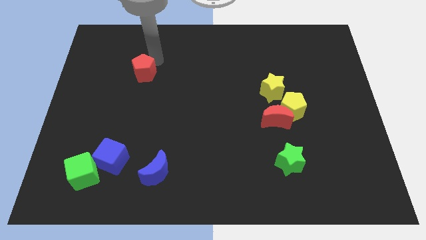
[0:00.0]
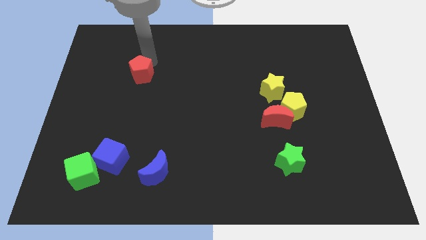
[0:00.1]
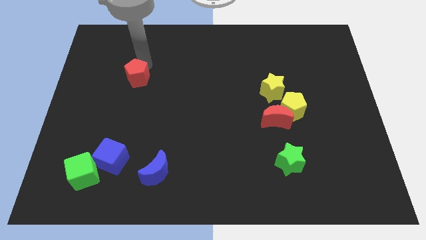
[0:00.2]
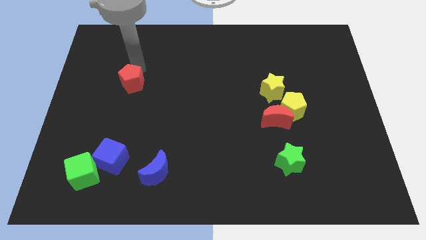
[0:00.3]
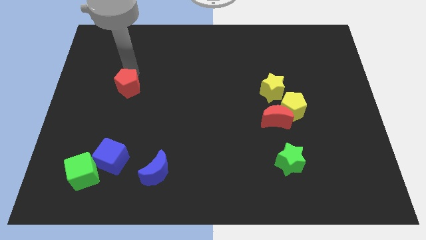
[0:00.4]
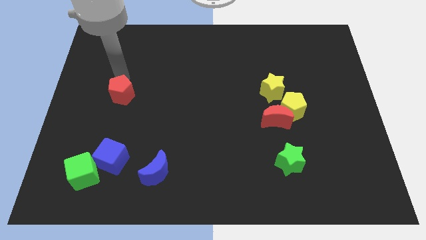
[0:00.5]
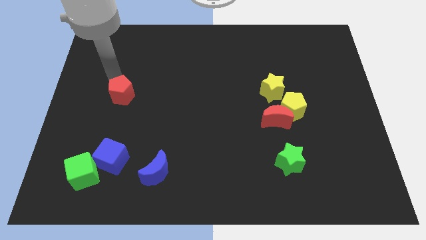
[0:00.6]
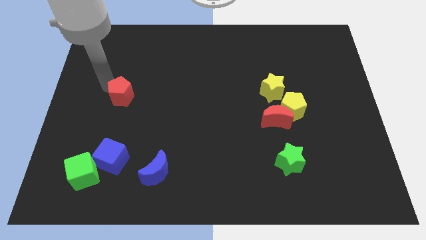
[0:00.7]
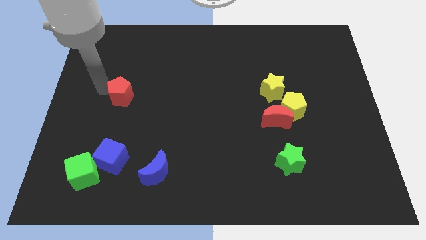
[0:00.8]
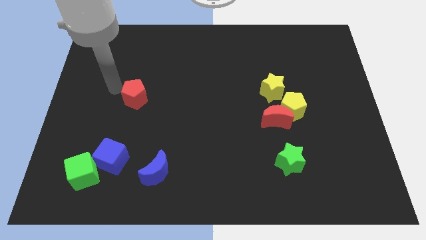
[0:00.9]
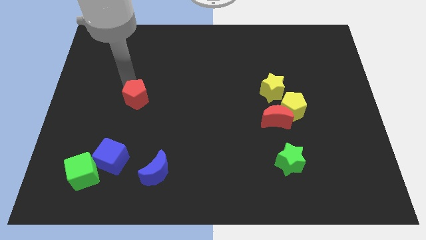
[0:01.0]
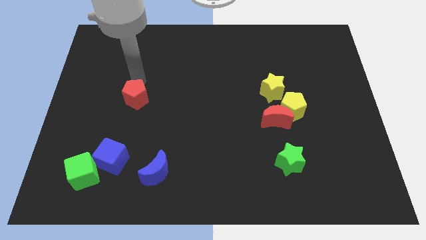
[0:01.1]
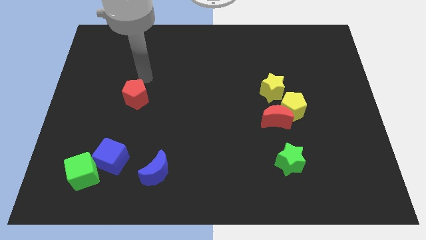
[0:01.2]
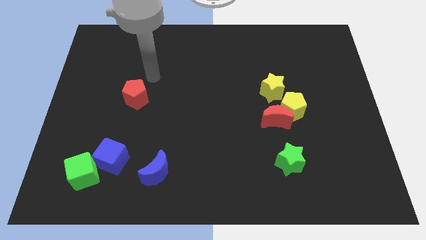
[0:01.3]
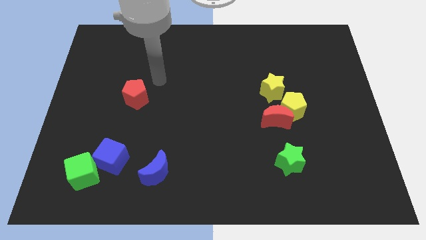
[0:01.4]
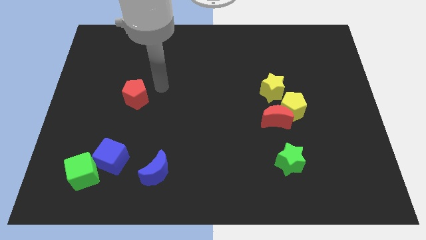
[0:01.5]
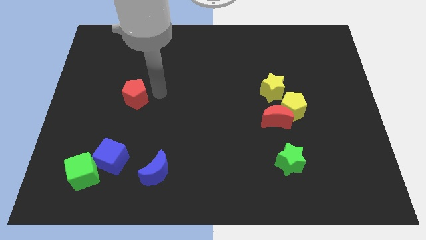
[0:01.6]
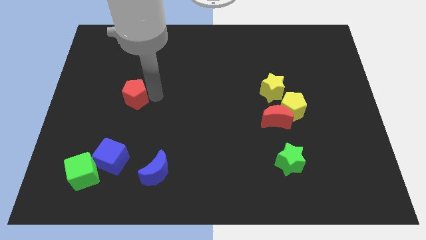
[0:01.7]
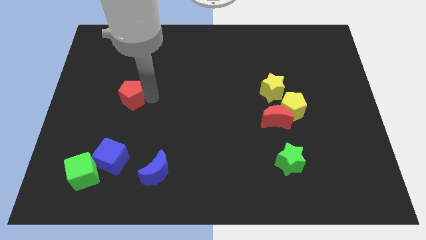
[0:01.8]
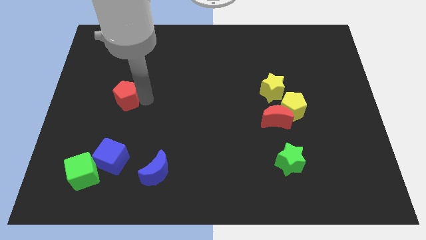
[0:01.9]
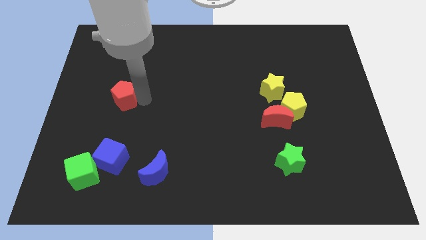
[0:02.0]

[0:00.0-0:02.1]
place red pentagon above the blue cube

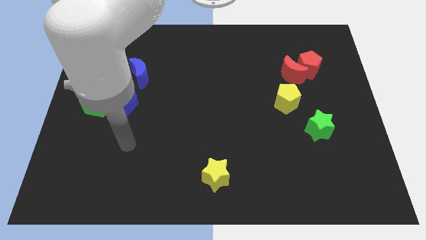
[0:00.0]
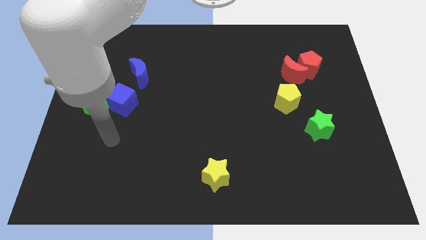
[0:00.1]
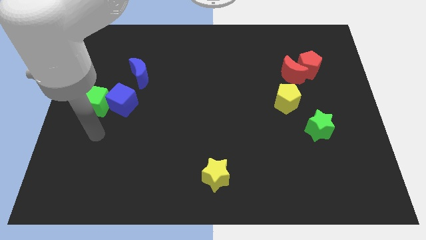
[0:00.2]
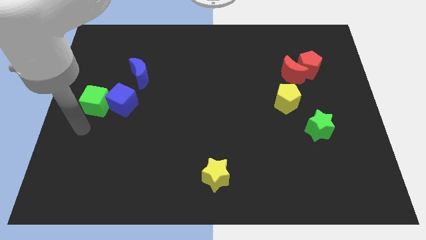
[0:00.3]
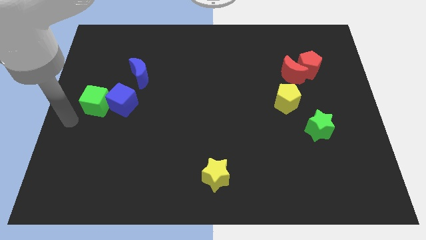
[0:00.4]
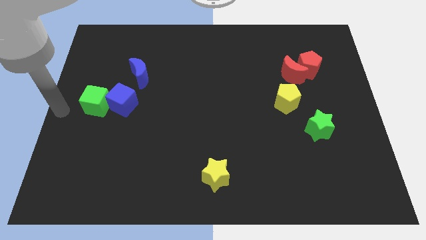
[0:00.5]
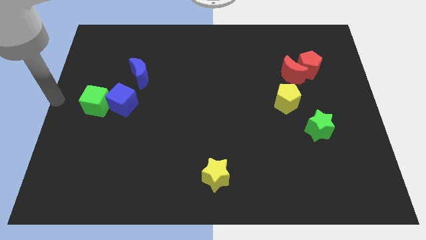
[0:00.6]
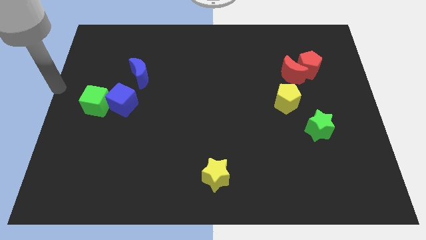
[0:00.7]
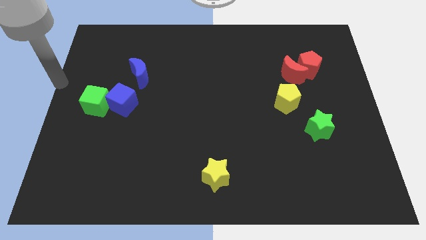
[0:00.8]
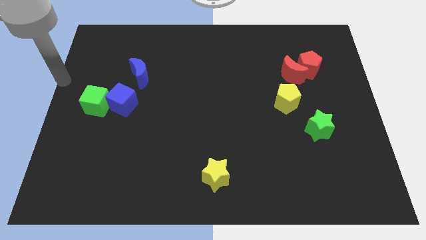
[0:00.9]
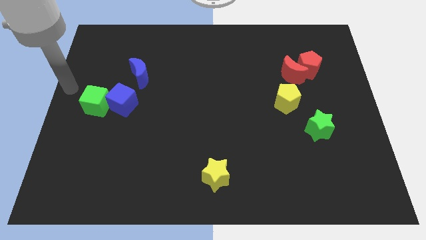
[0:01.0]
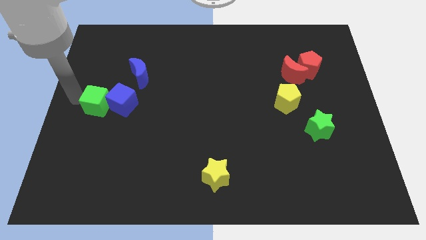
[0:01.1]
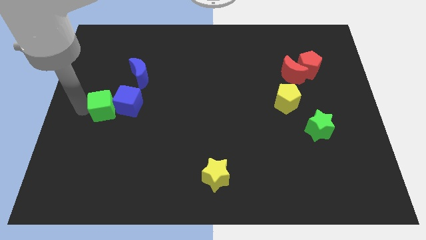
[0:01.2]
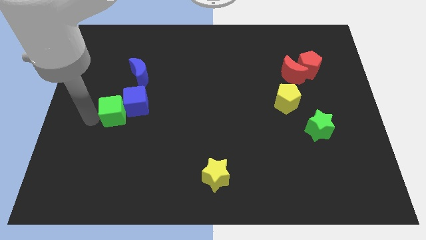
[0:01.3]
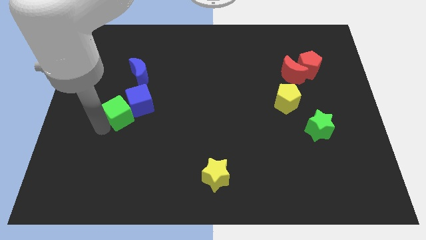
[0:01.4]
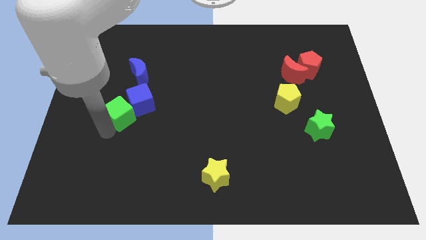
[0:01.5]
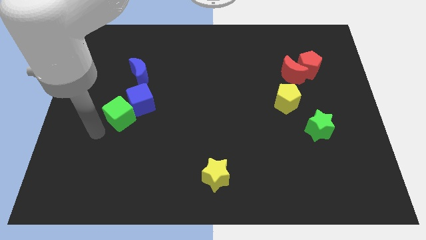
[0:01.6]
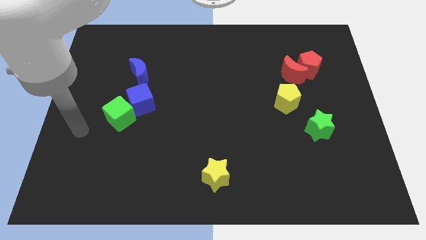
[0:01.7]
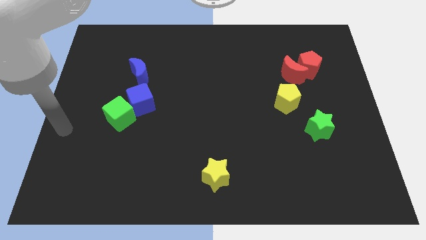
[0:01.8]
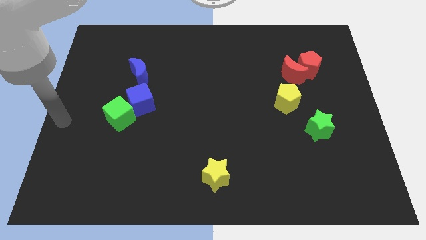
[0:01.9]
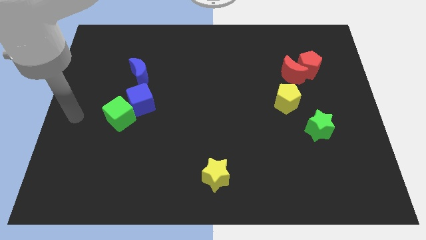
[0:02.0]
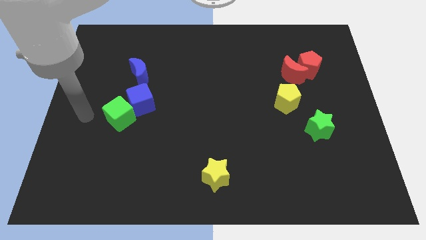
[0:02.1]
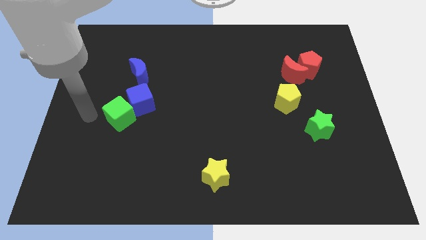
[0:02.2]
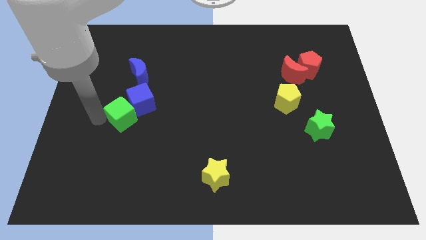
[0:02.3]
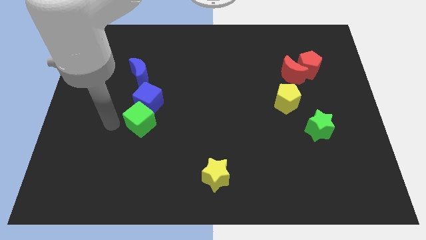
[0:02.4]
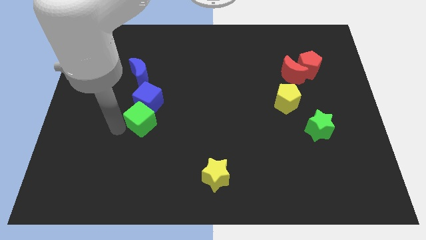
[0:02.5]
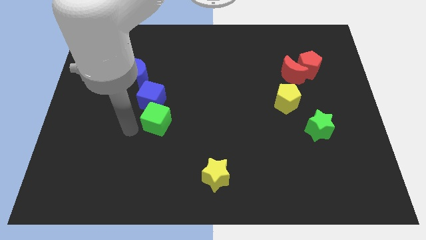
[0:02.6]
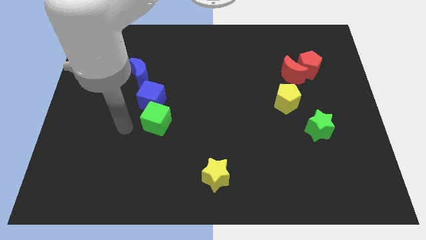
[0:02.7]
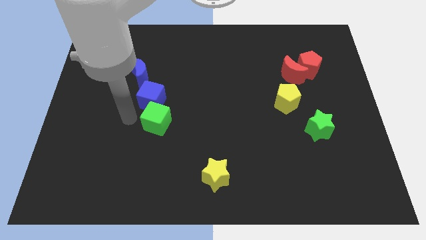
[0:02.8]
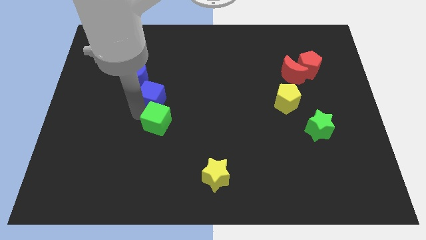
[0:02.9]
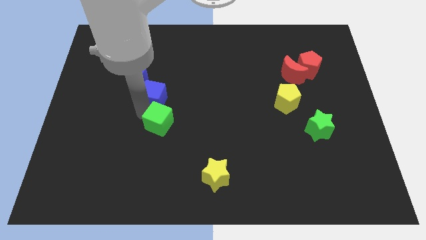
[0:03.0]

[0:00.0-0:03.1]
push the green cube towards the bottom right of the blue cube

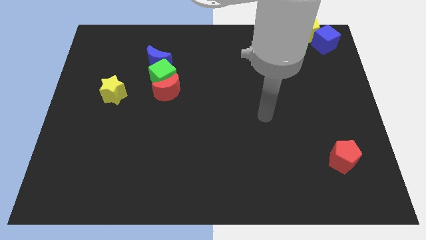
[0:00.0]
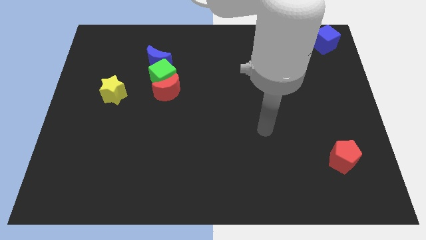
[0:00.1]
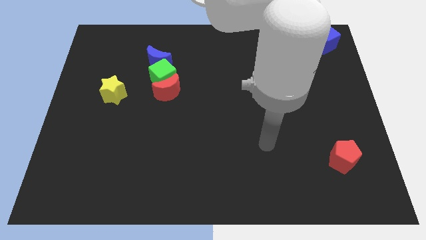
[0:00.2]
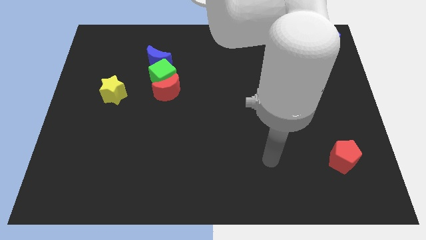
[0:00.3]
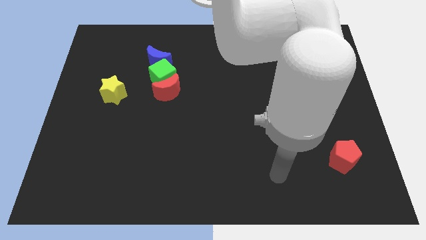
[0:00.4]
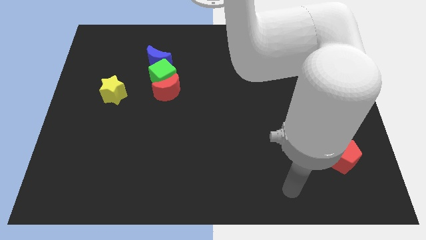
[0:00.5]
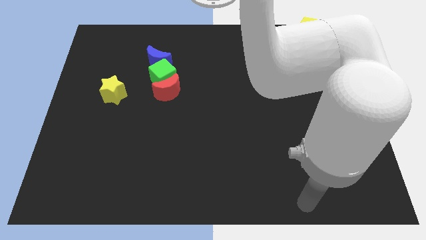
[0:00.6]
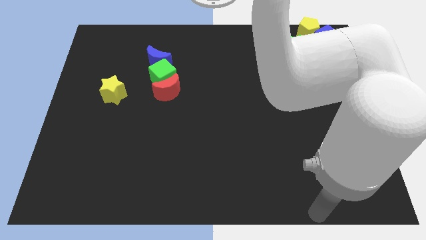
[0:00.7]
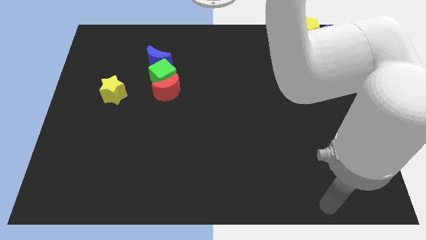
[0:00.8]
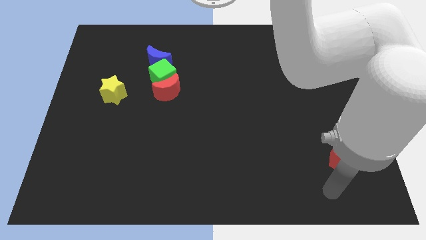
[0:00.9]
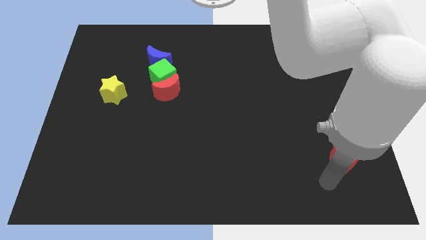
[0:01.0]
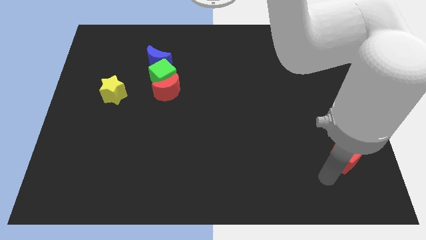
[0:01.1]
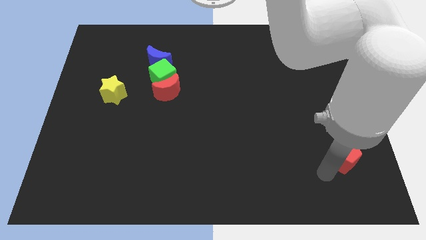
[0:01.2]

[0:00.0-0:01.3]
place your hand at the bottom left of the red pentagon

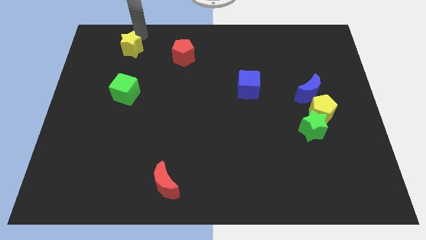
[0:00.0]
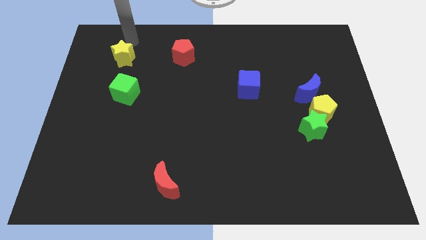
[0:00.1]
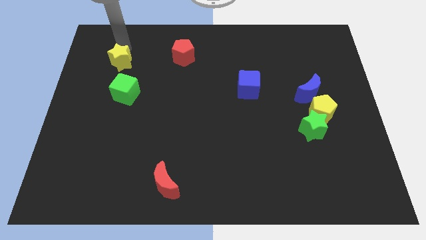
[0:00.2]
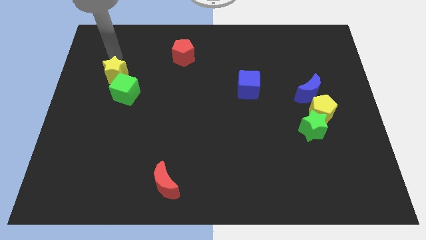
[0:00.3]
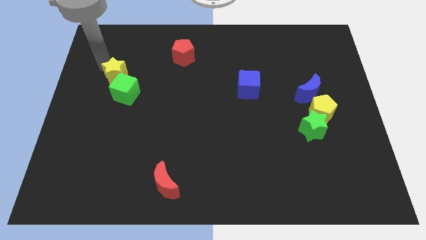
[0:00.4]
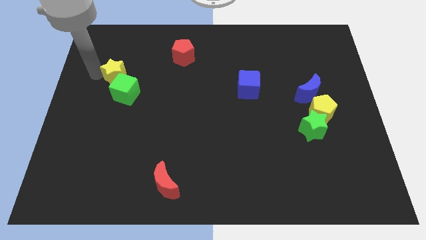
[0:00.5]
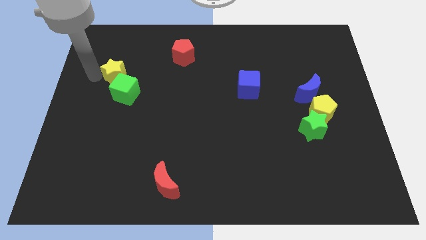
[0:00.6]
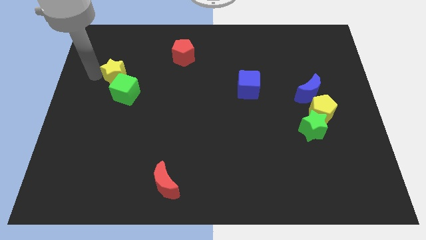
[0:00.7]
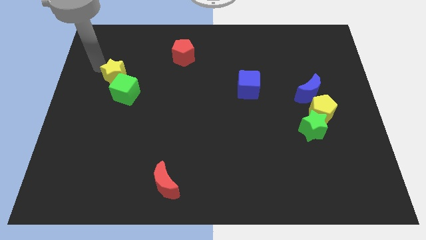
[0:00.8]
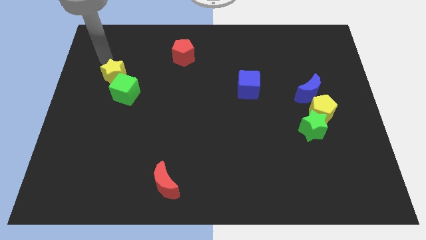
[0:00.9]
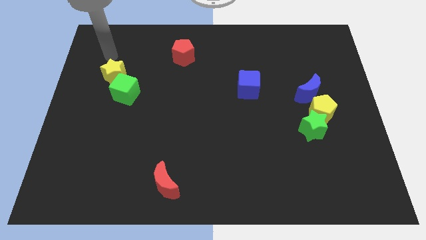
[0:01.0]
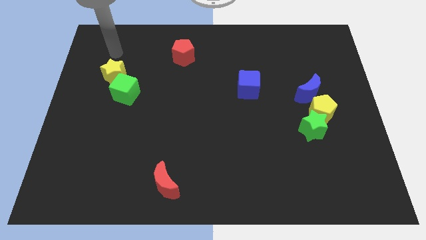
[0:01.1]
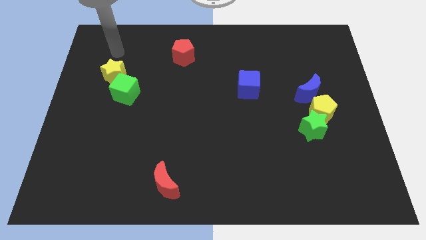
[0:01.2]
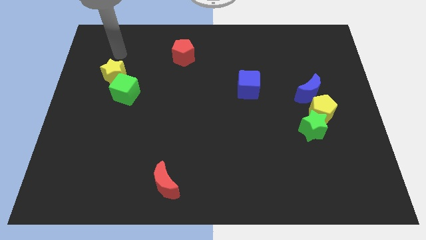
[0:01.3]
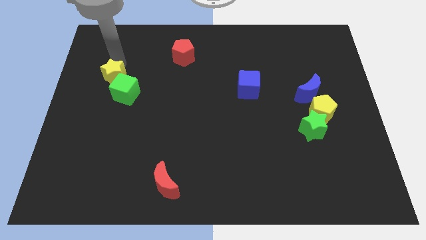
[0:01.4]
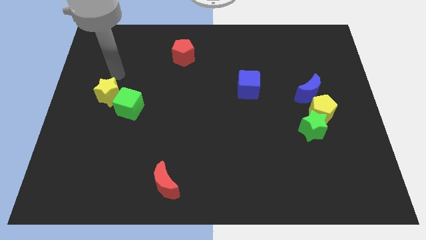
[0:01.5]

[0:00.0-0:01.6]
push the yellow star into the green cube

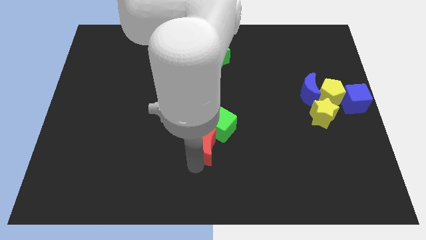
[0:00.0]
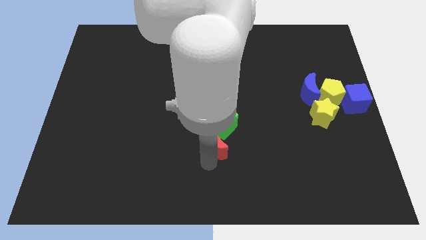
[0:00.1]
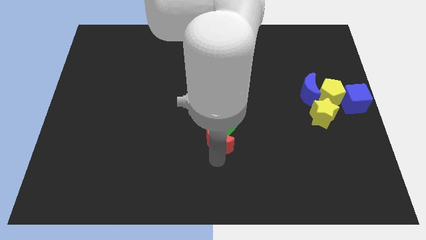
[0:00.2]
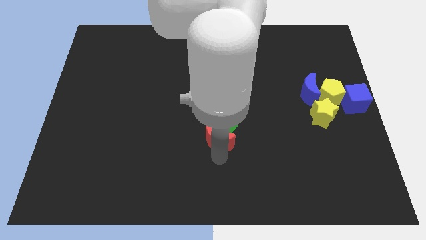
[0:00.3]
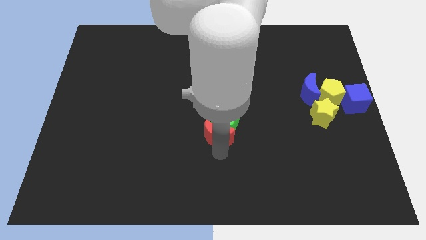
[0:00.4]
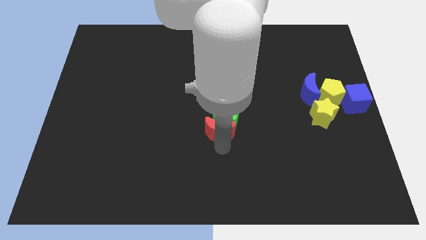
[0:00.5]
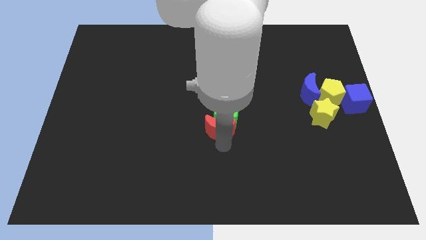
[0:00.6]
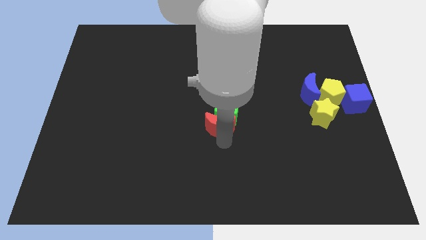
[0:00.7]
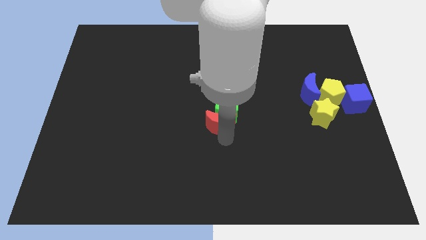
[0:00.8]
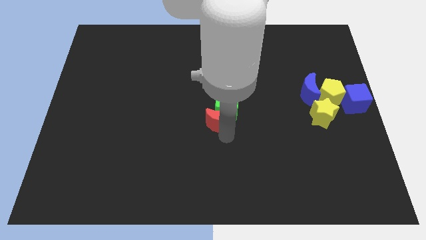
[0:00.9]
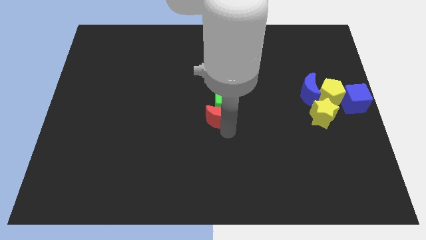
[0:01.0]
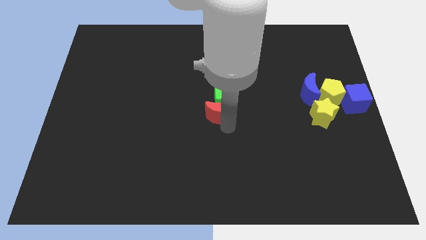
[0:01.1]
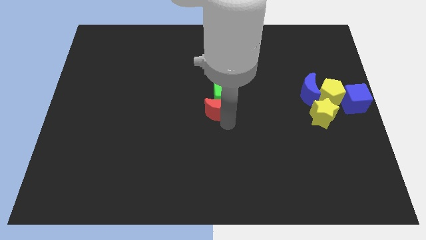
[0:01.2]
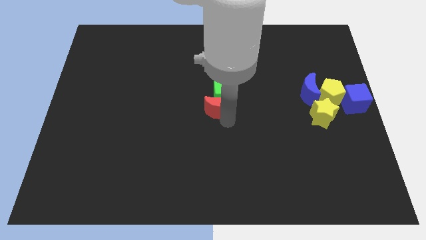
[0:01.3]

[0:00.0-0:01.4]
push red crescent into the green cube
